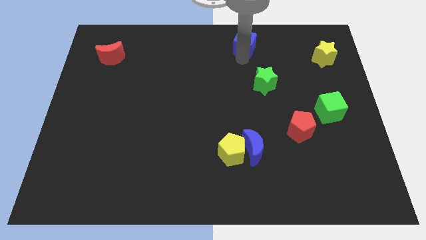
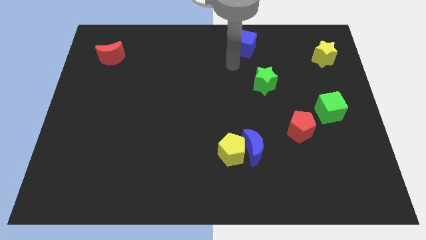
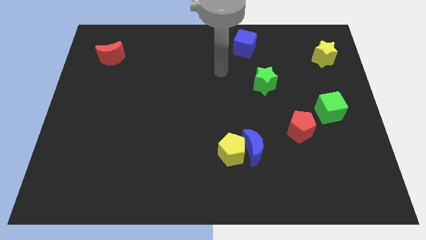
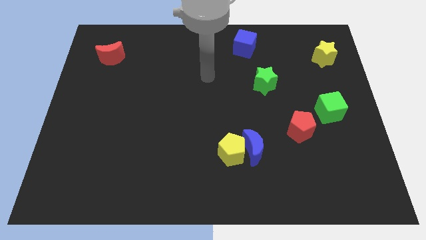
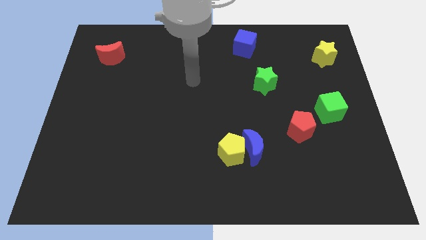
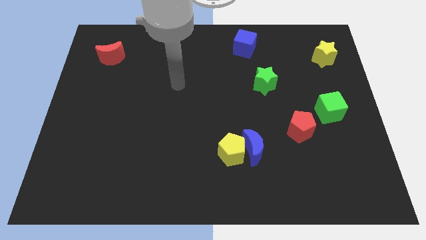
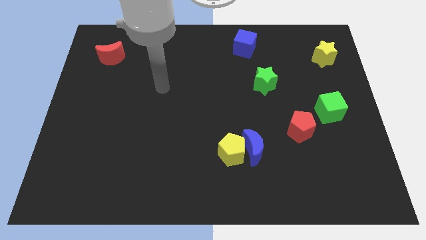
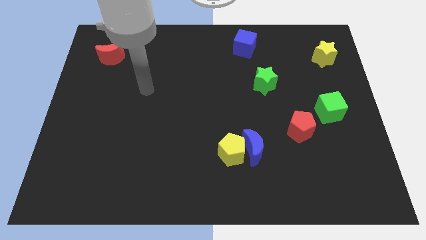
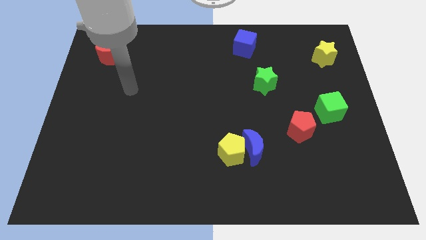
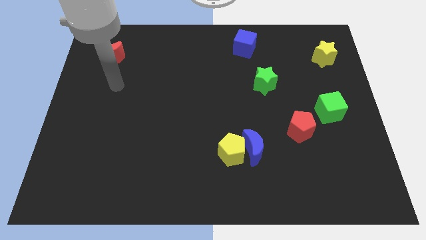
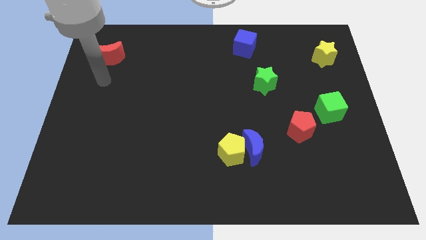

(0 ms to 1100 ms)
move the arm below the red crescent

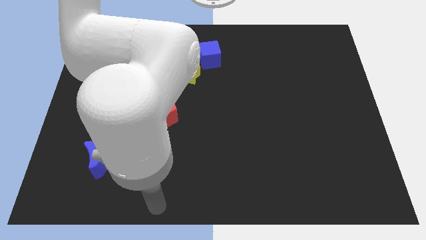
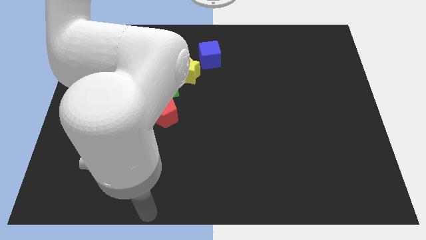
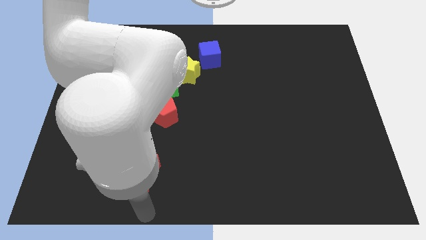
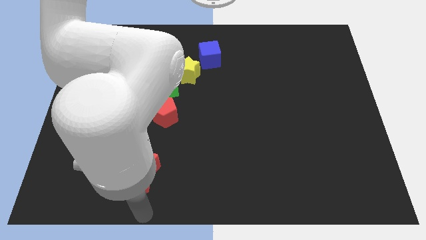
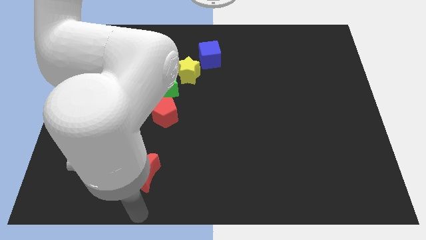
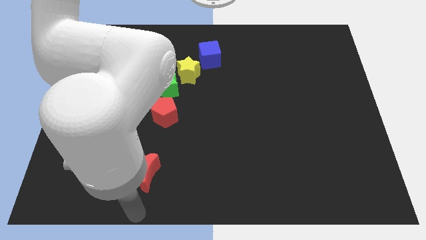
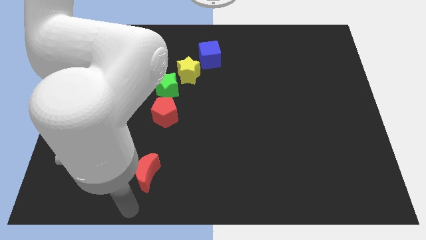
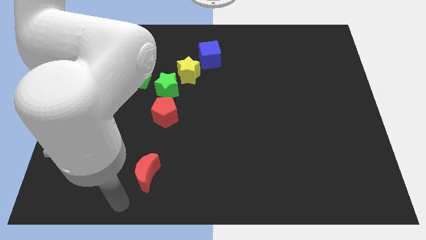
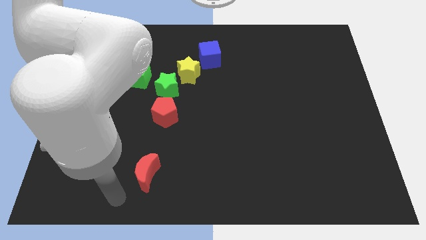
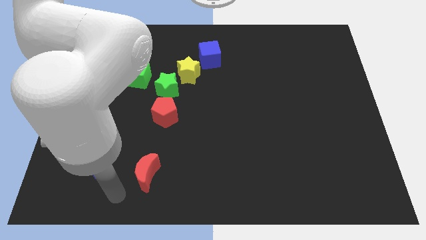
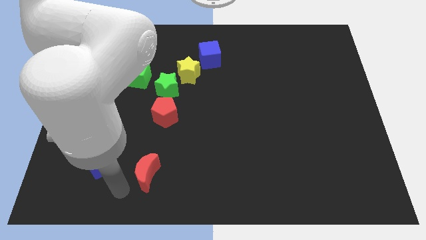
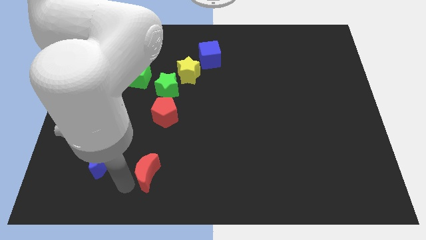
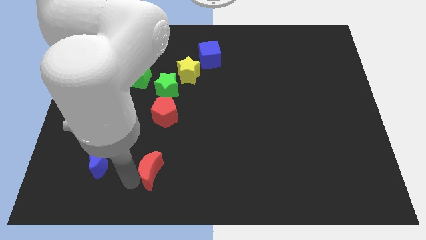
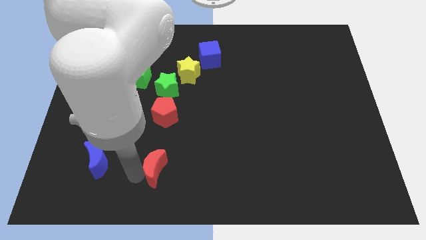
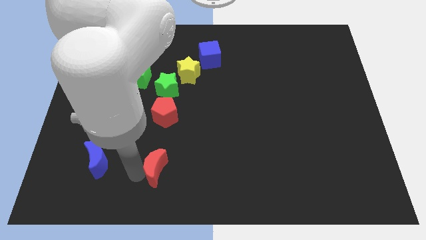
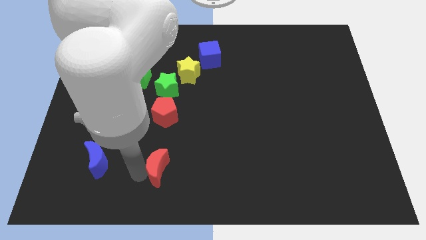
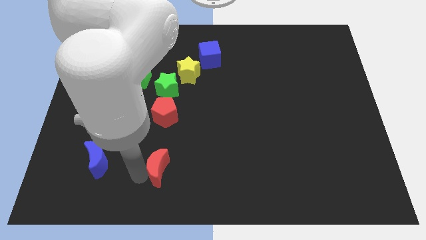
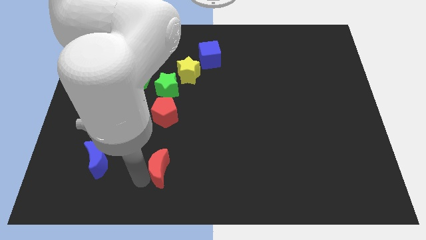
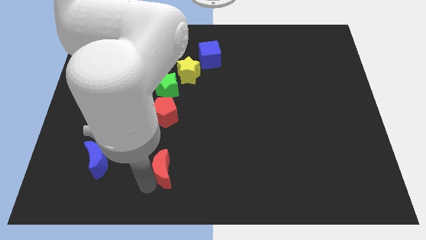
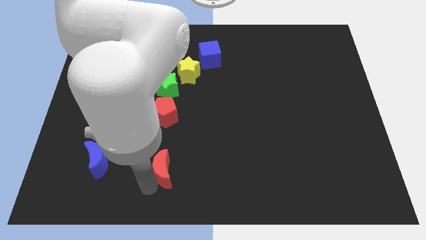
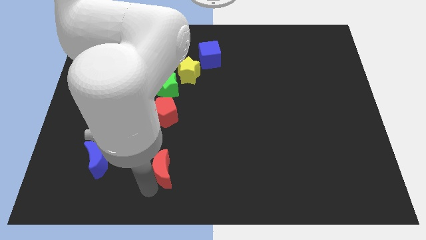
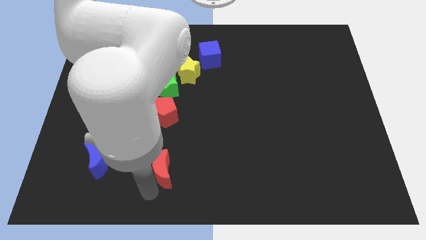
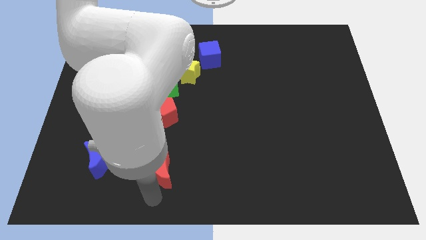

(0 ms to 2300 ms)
adjust the red moon parallel to the bottom of red pentagon

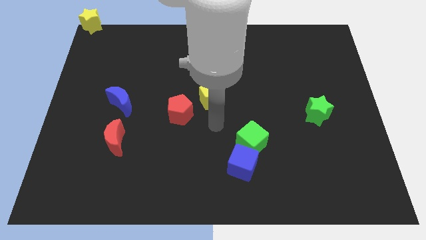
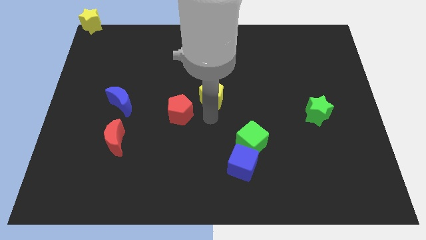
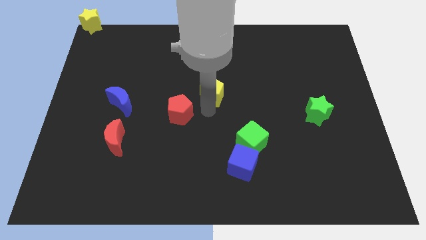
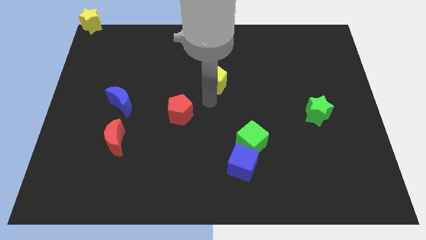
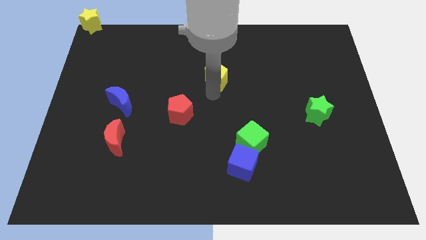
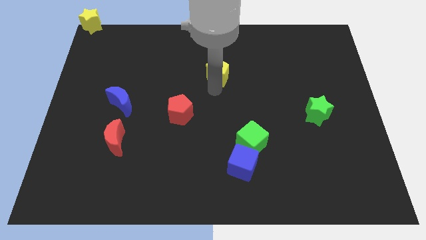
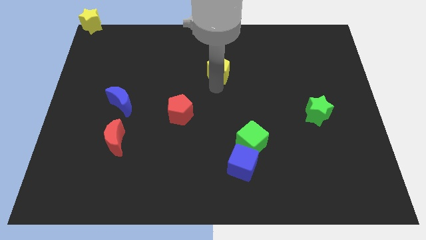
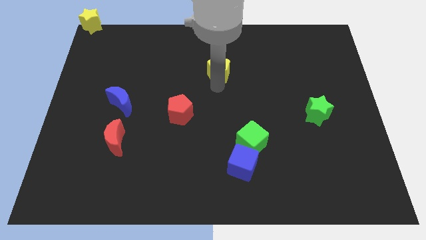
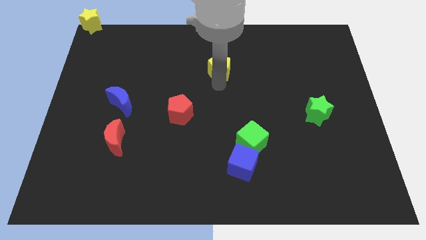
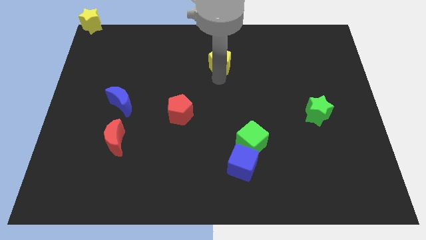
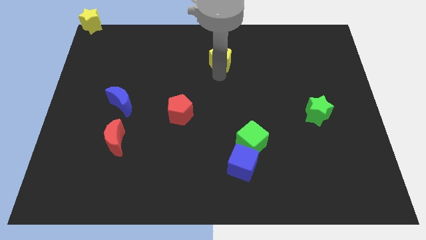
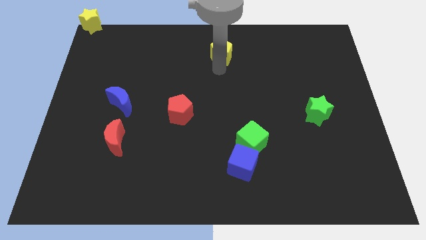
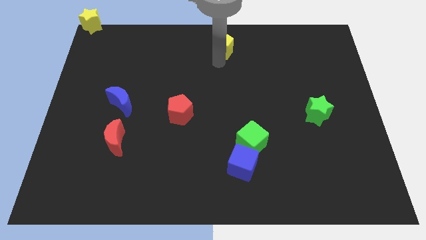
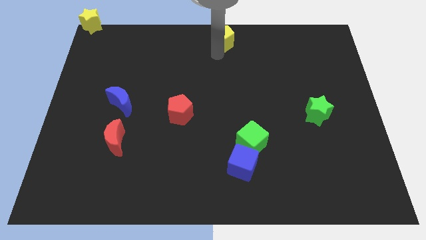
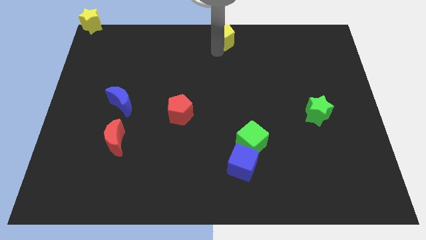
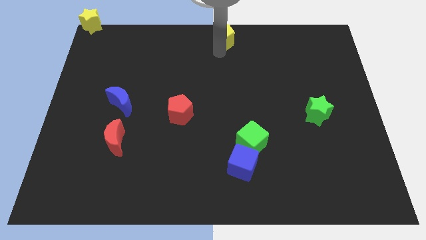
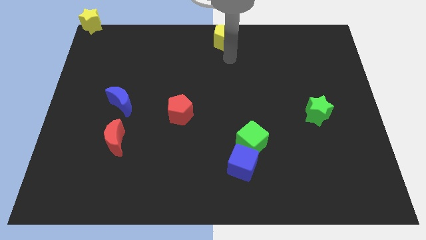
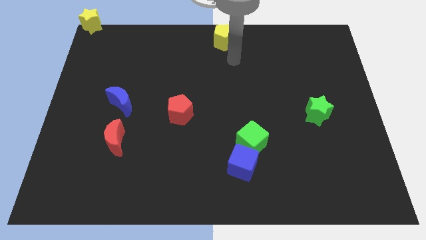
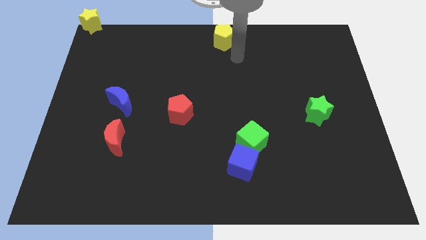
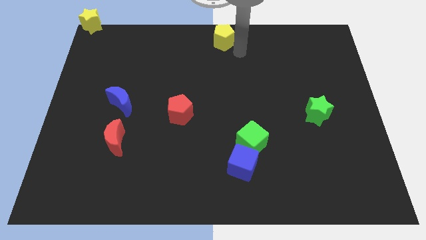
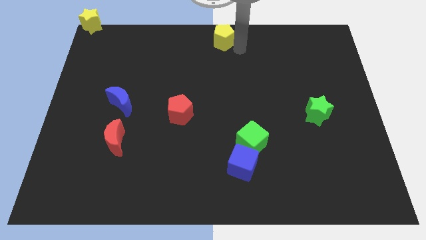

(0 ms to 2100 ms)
move yellow pentagon to the top center

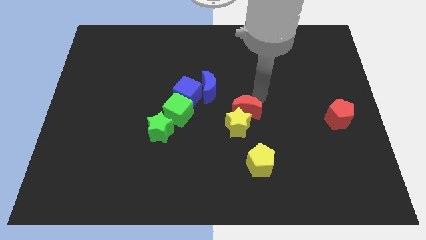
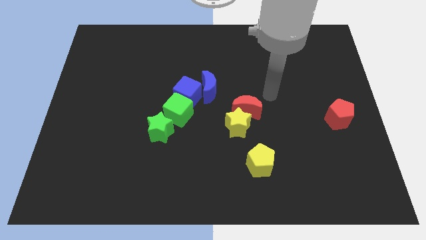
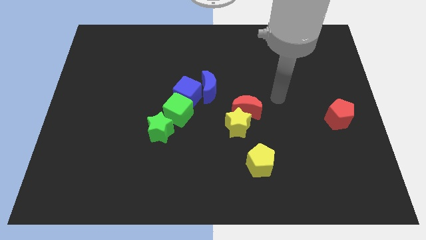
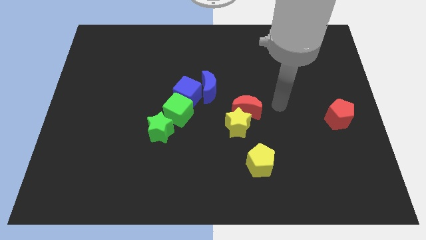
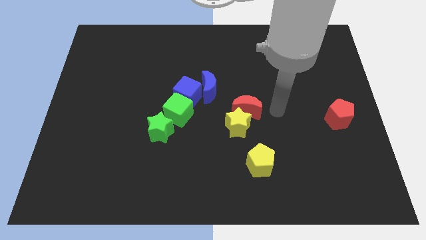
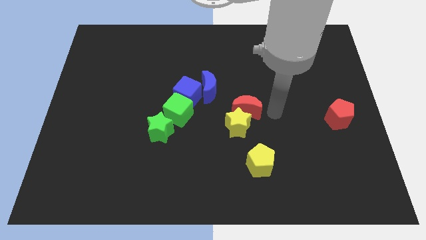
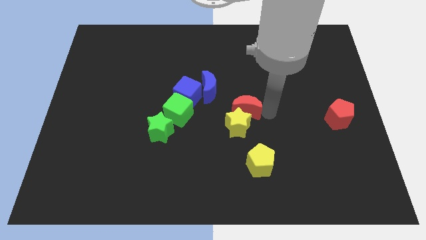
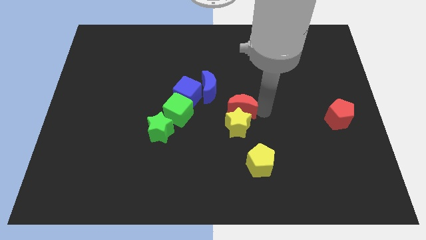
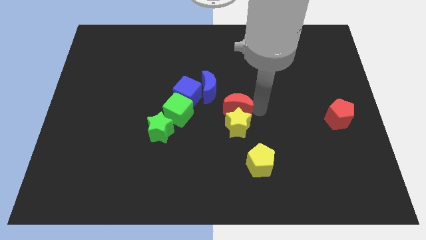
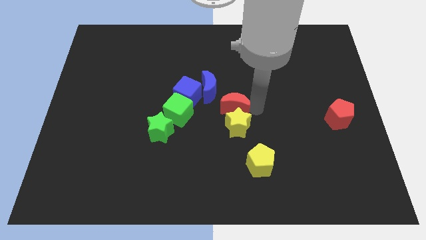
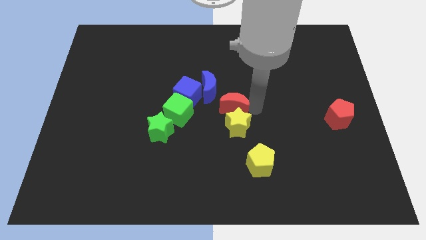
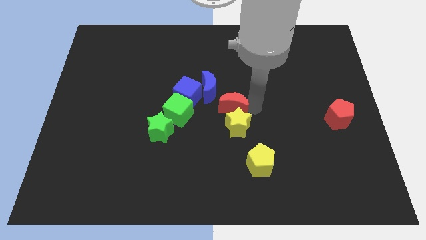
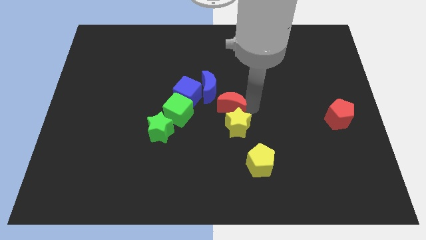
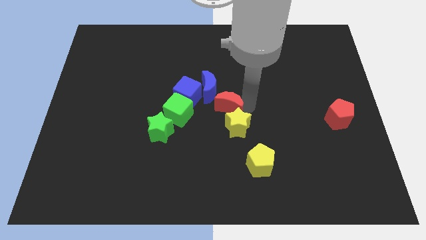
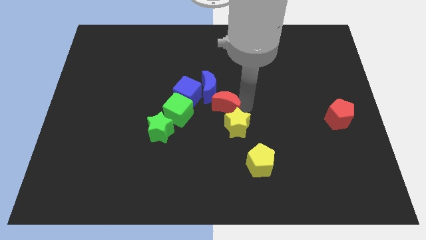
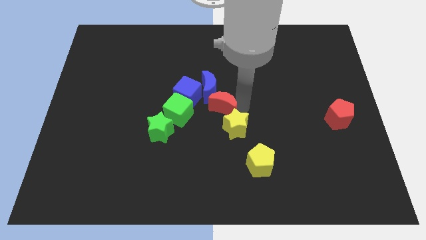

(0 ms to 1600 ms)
push the red crescent to the bottom of the blue crescent

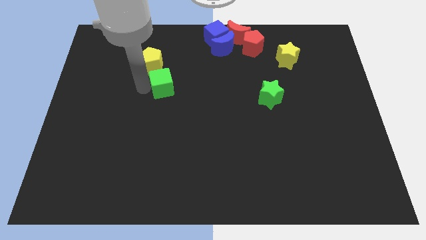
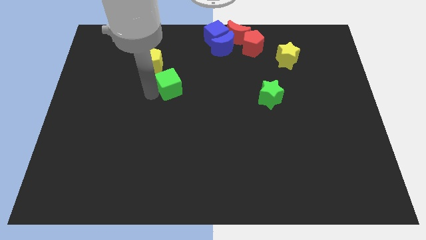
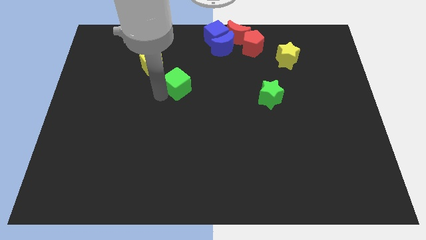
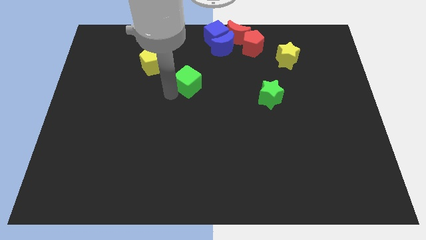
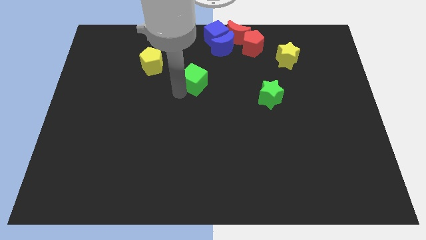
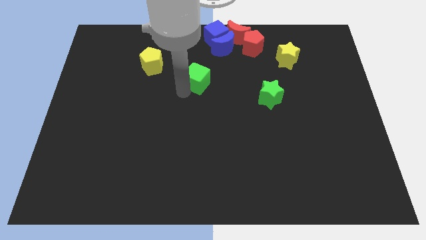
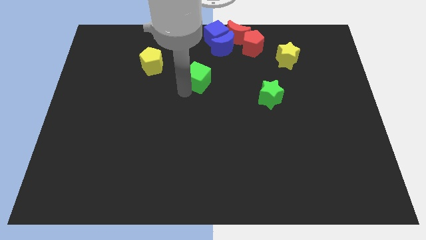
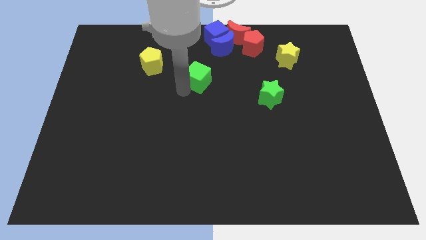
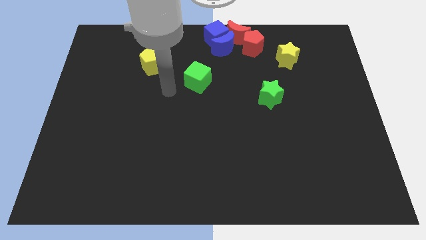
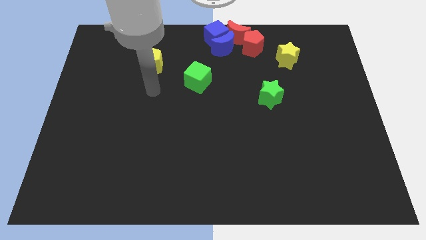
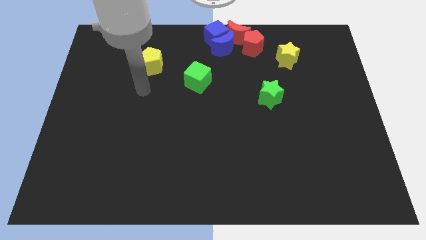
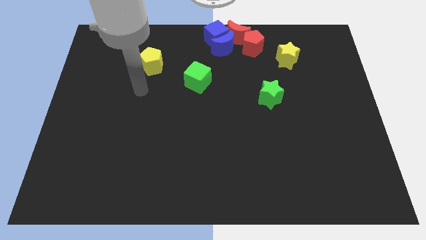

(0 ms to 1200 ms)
place the green cube in between the green star and yellow pentagon to form a diagonal line

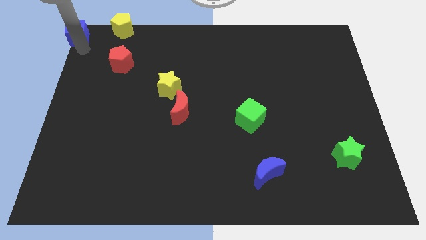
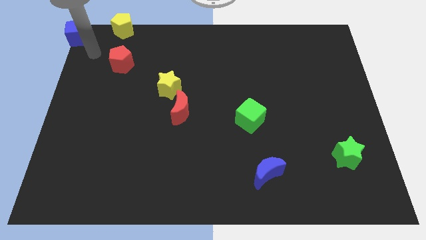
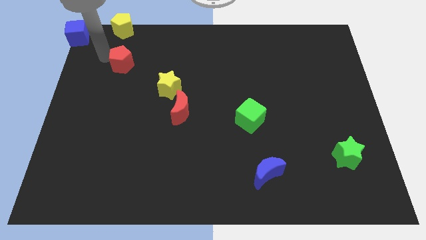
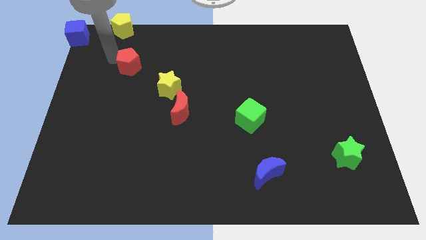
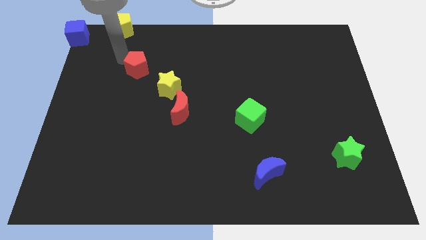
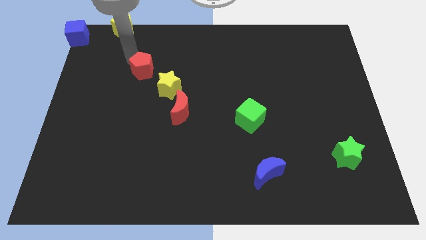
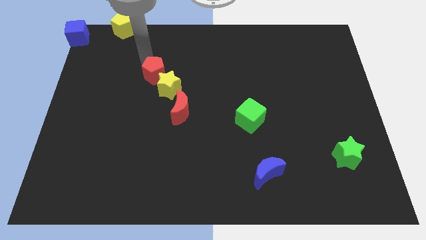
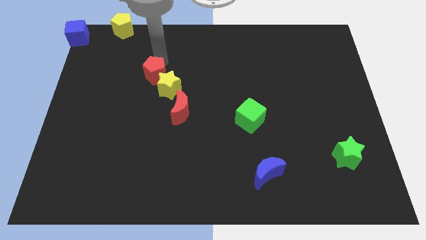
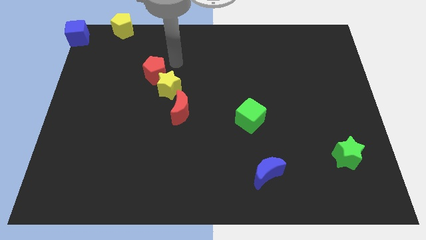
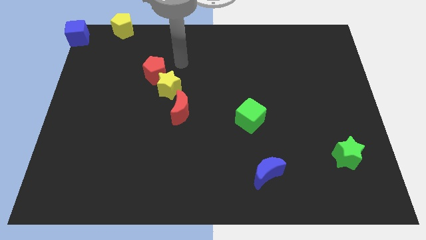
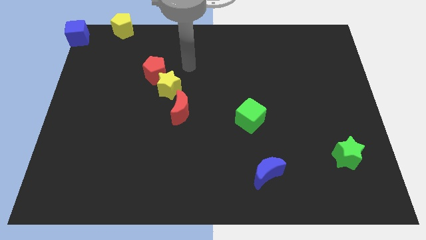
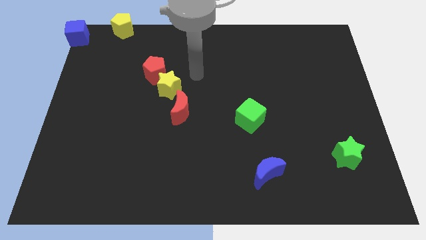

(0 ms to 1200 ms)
move red pentagon into yellow star
